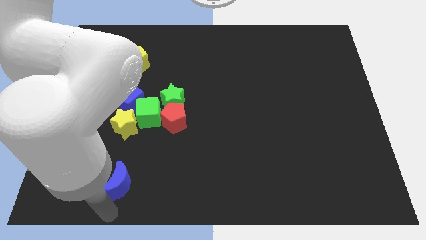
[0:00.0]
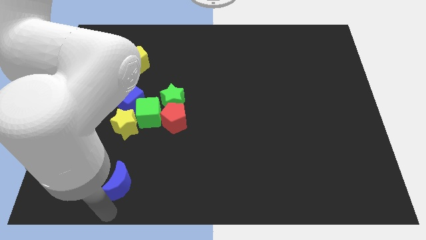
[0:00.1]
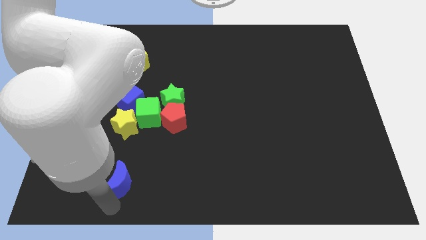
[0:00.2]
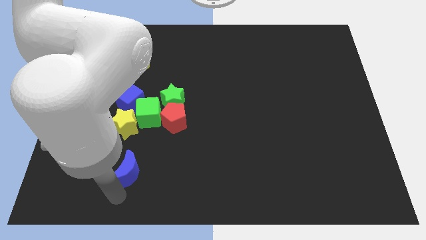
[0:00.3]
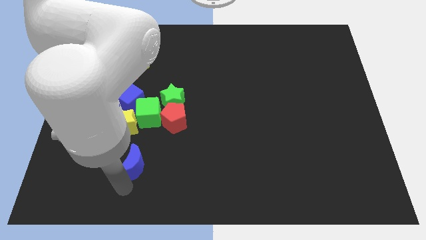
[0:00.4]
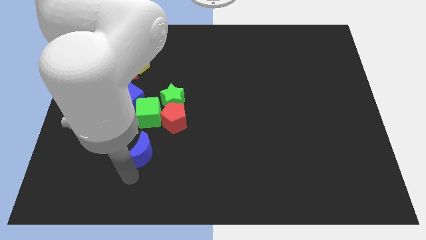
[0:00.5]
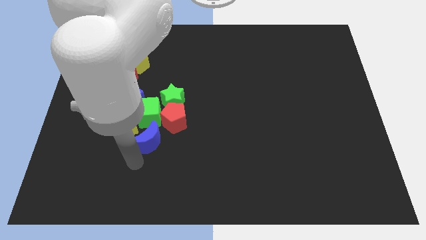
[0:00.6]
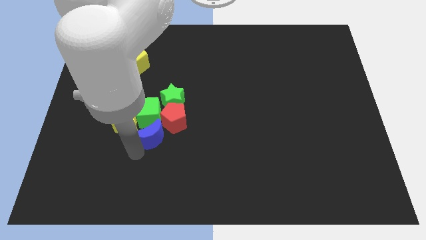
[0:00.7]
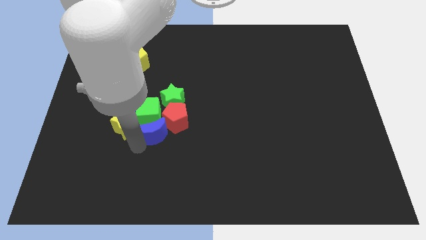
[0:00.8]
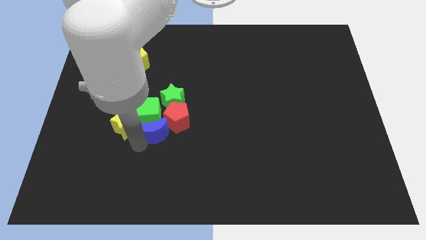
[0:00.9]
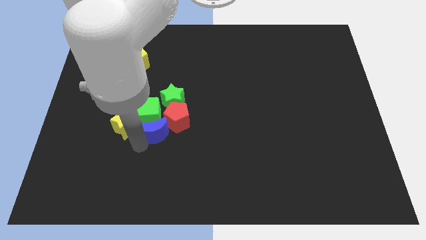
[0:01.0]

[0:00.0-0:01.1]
move the blue crescent to the bottom of the green cube

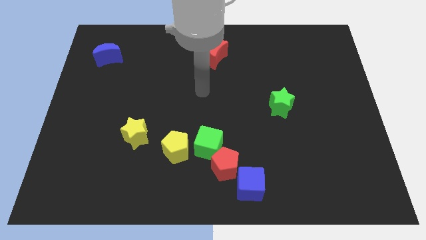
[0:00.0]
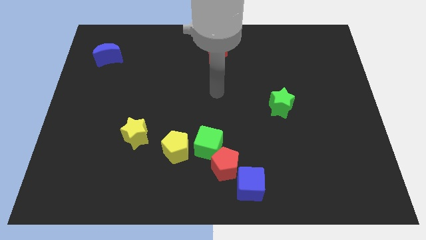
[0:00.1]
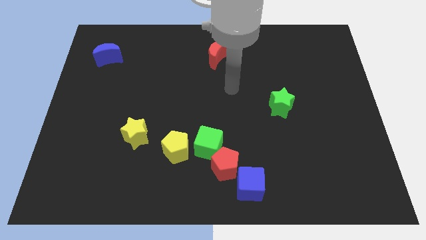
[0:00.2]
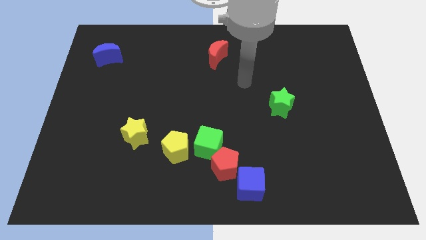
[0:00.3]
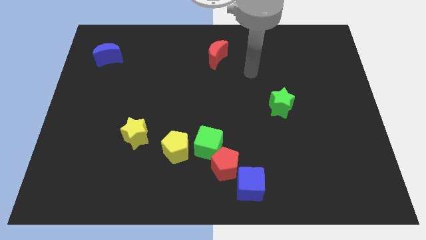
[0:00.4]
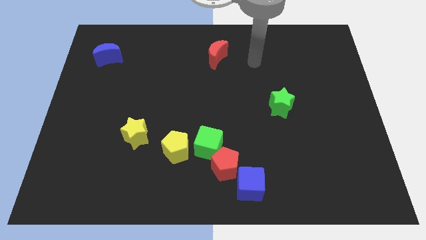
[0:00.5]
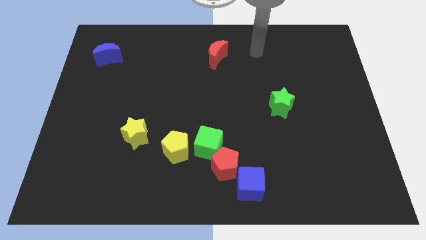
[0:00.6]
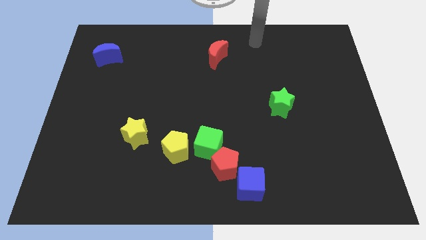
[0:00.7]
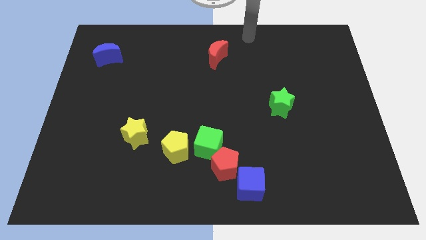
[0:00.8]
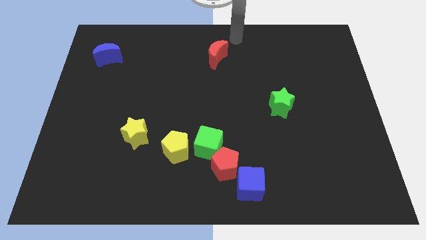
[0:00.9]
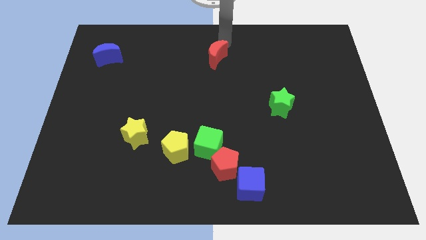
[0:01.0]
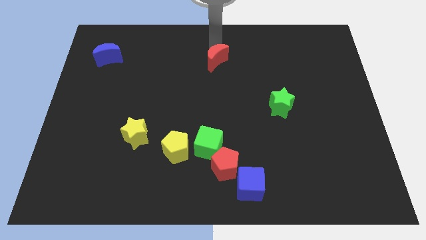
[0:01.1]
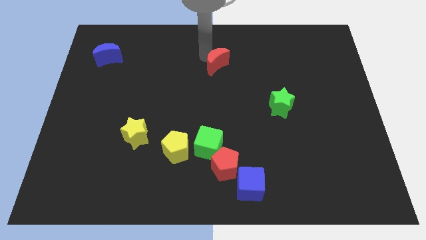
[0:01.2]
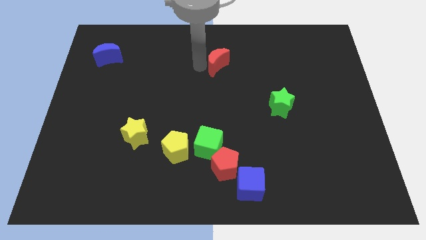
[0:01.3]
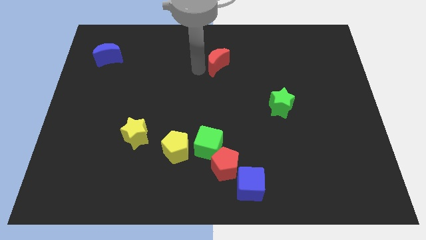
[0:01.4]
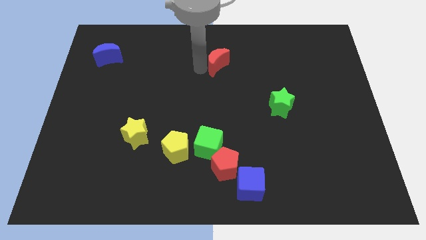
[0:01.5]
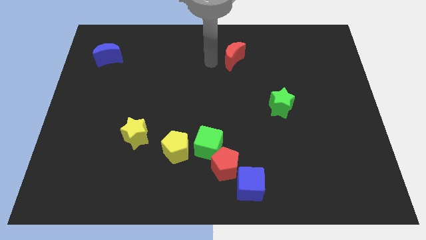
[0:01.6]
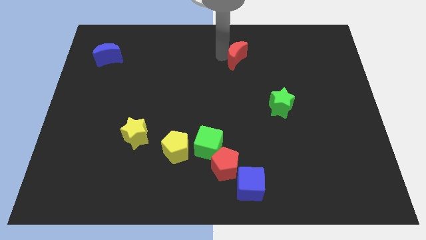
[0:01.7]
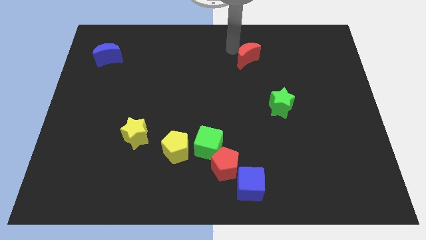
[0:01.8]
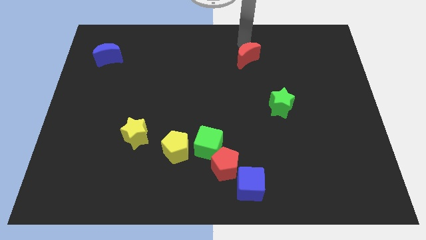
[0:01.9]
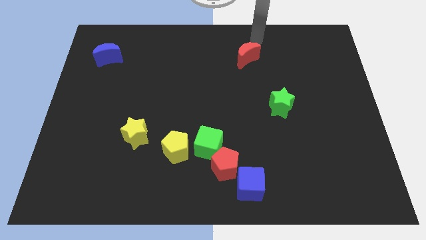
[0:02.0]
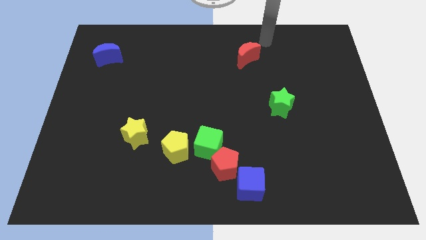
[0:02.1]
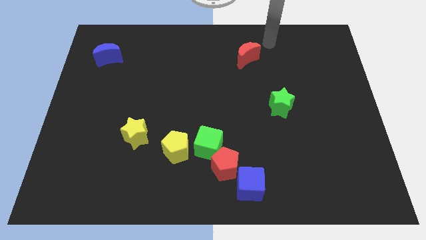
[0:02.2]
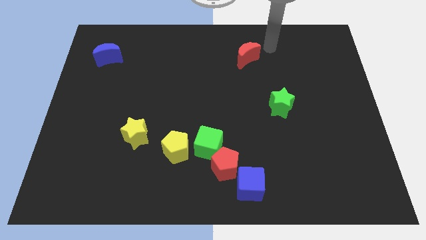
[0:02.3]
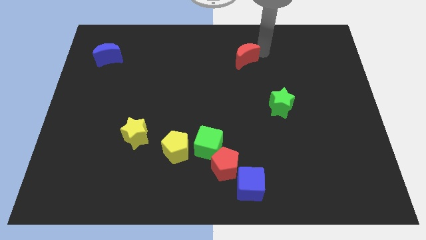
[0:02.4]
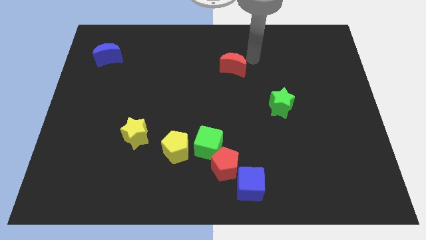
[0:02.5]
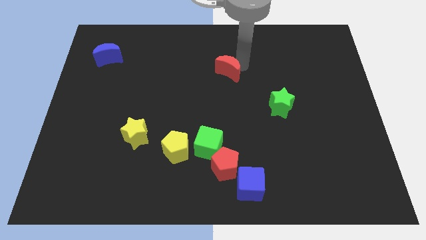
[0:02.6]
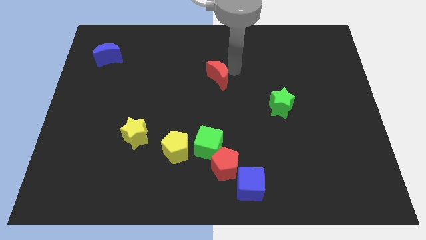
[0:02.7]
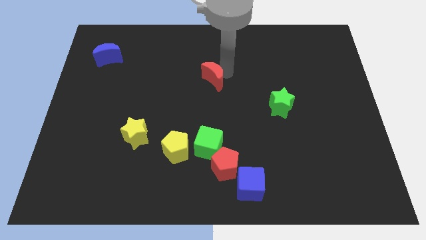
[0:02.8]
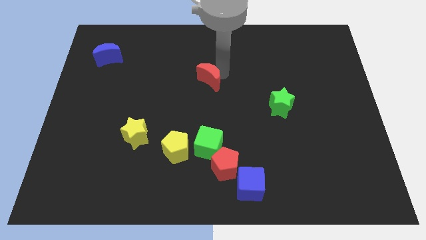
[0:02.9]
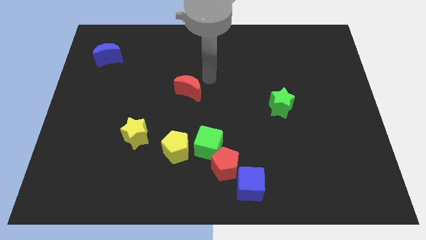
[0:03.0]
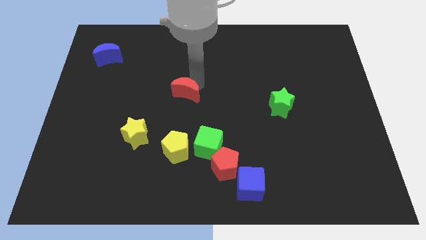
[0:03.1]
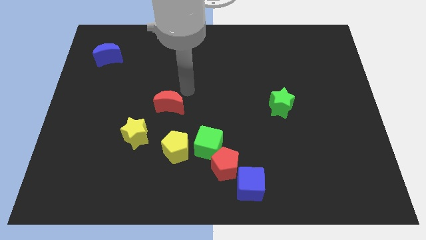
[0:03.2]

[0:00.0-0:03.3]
place the red moon to the center of the board

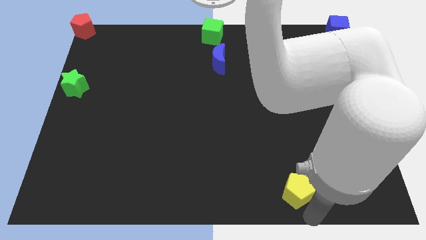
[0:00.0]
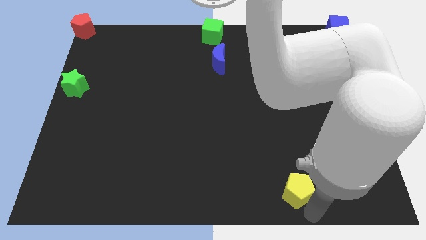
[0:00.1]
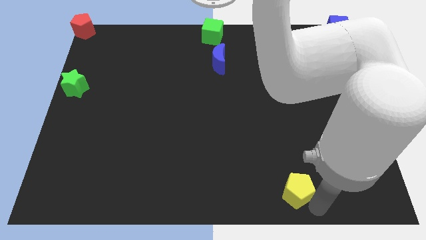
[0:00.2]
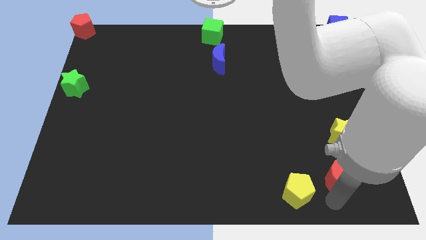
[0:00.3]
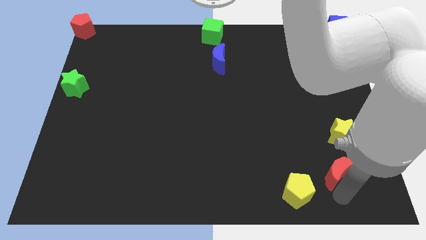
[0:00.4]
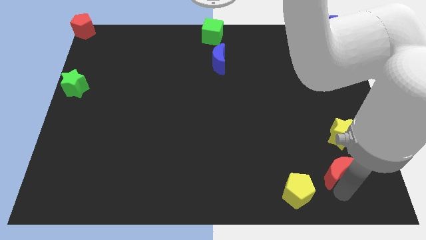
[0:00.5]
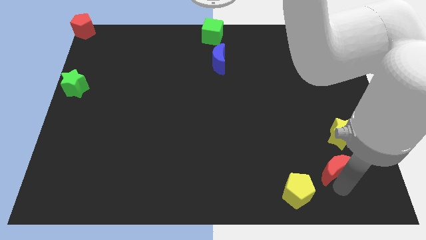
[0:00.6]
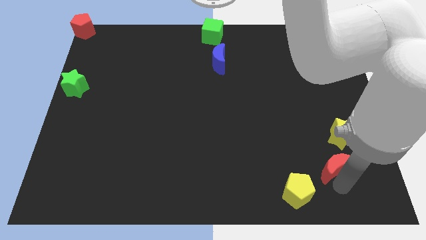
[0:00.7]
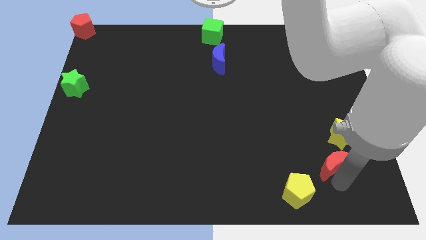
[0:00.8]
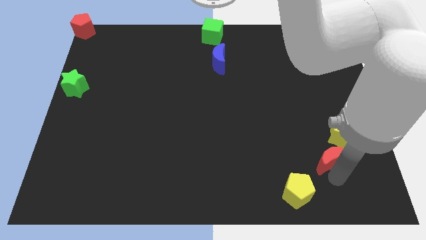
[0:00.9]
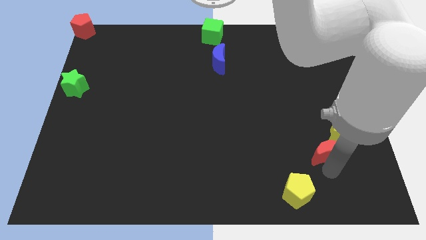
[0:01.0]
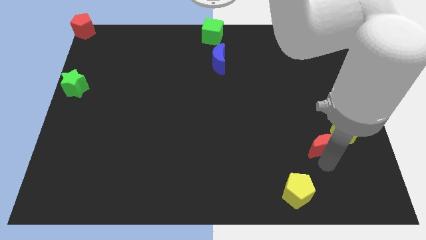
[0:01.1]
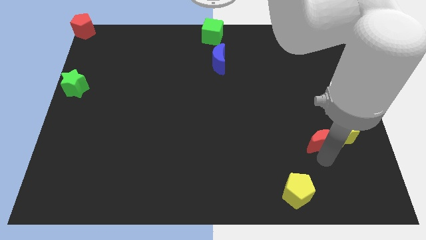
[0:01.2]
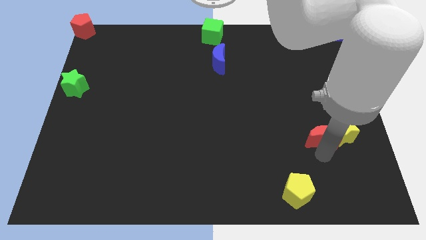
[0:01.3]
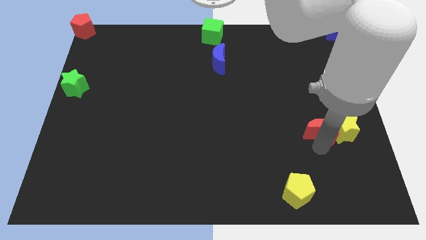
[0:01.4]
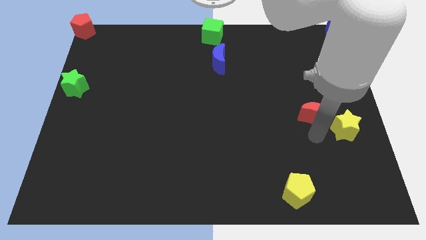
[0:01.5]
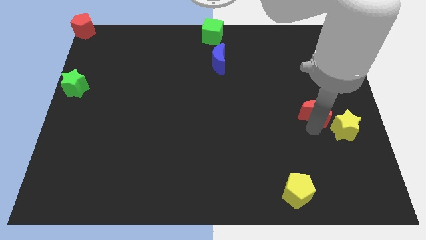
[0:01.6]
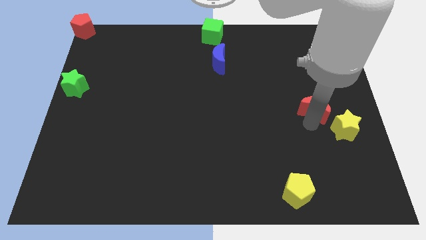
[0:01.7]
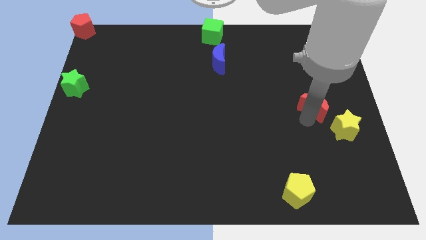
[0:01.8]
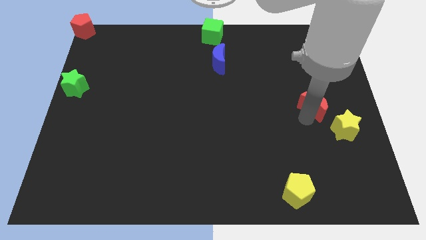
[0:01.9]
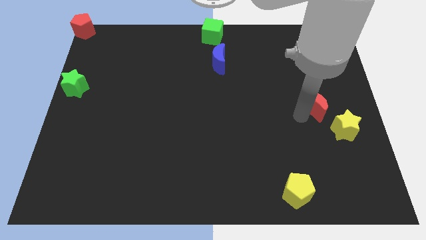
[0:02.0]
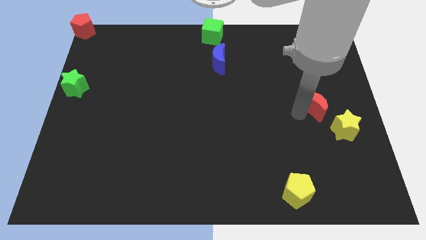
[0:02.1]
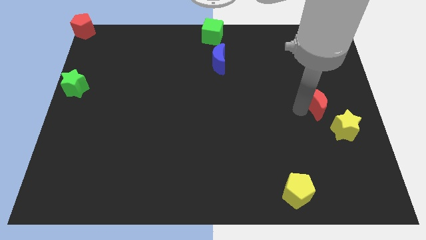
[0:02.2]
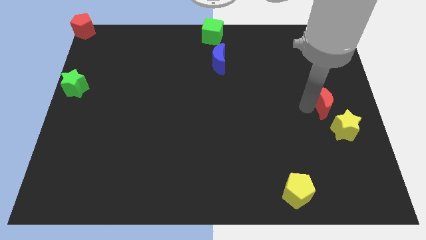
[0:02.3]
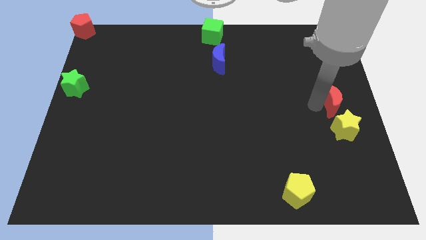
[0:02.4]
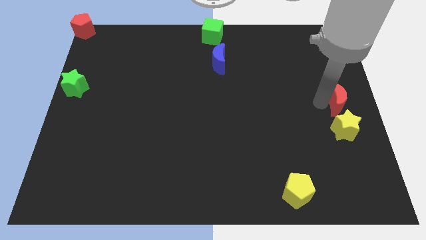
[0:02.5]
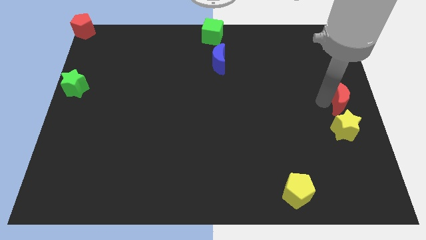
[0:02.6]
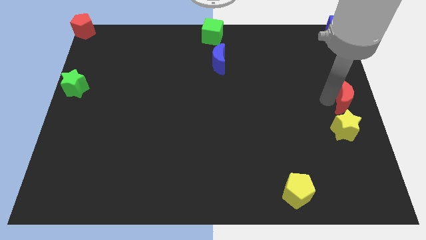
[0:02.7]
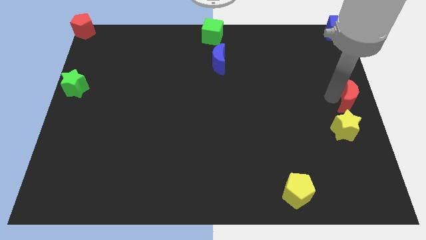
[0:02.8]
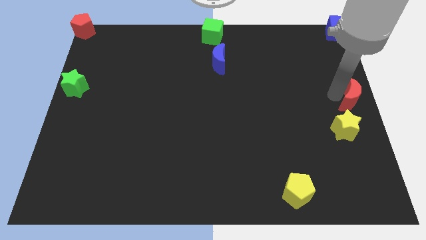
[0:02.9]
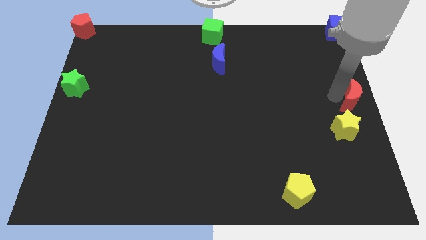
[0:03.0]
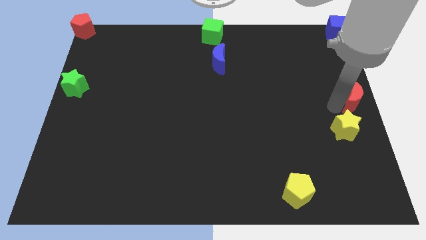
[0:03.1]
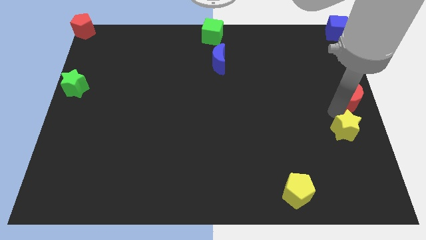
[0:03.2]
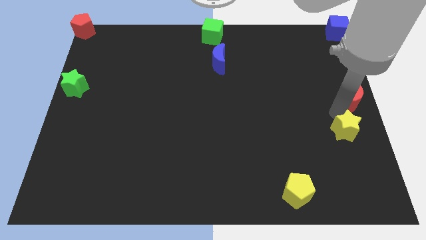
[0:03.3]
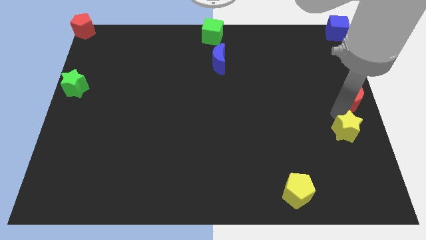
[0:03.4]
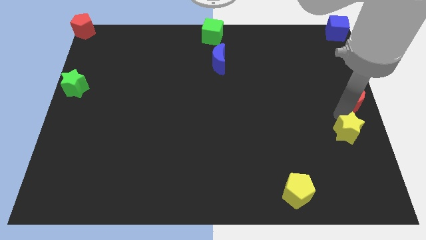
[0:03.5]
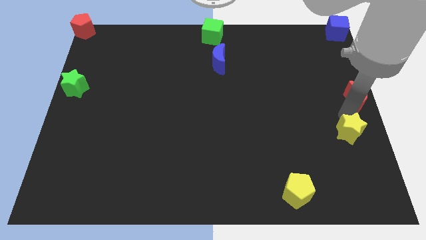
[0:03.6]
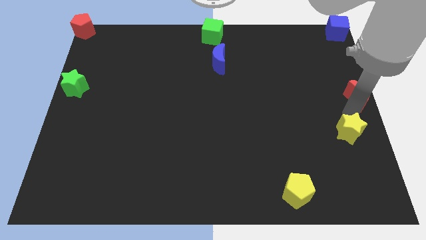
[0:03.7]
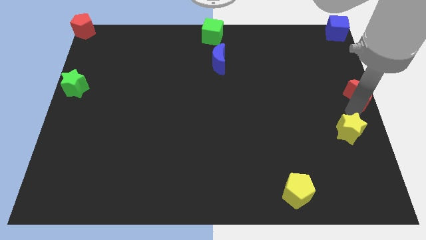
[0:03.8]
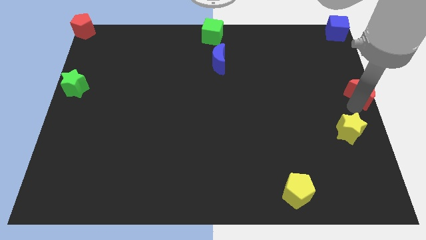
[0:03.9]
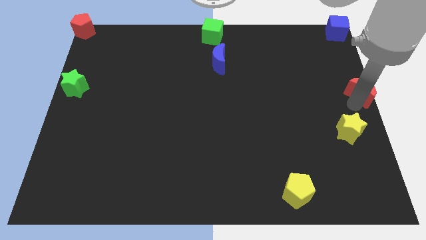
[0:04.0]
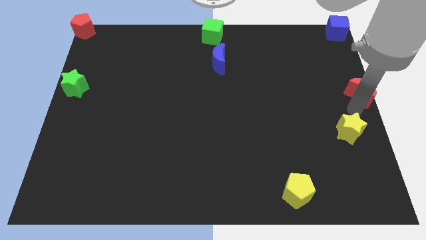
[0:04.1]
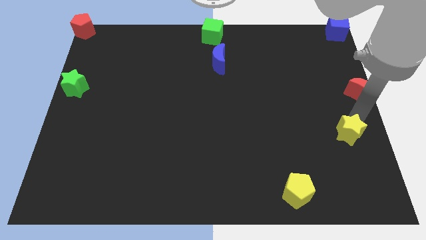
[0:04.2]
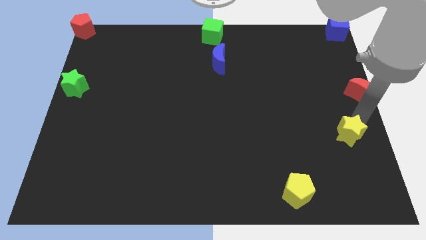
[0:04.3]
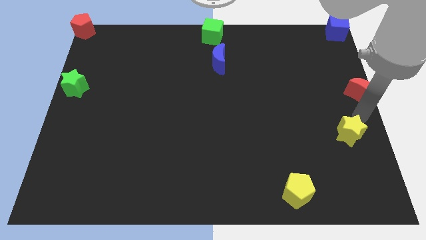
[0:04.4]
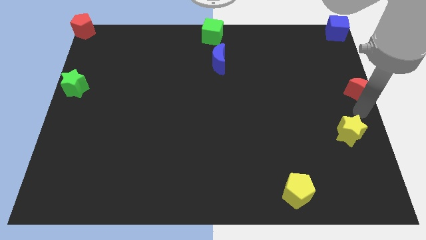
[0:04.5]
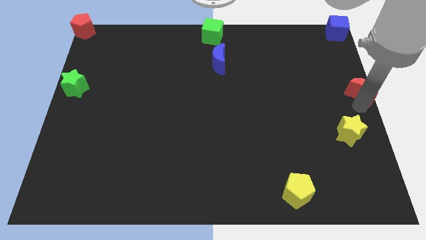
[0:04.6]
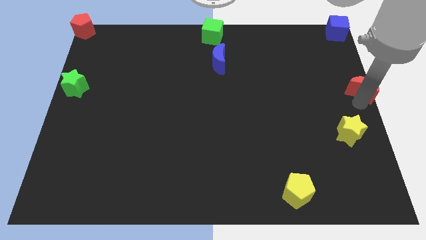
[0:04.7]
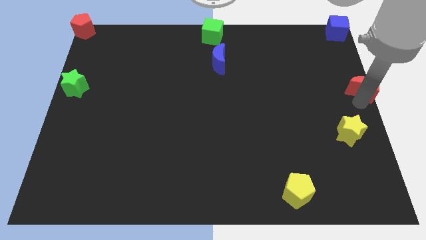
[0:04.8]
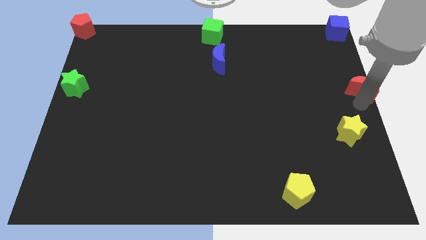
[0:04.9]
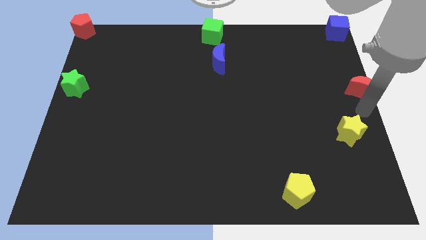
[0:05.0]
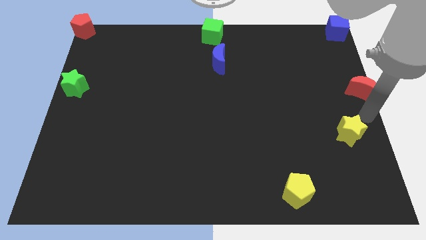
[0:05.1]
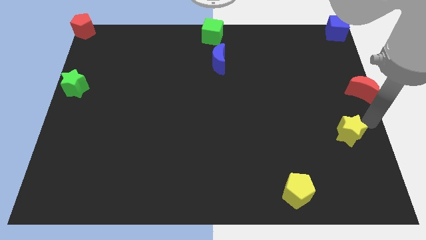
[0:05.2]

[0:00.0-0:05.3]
push the red moon to the right center of the board
